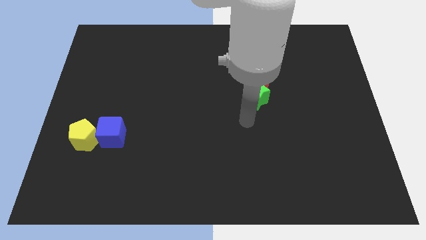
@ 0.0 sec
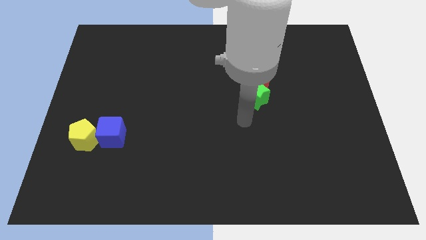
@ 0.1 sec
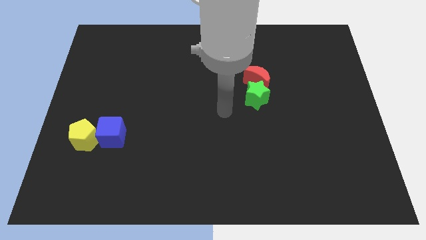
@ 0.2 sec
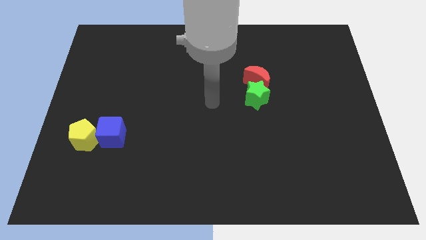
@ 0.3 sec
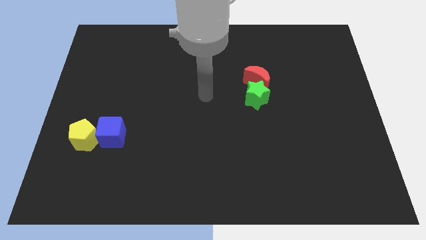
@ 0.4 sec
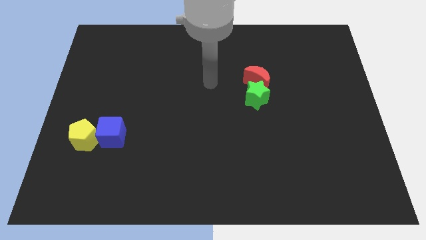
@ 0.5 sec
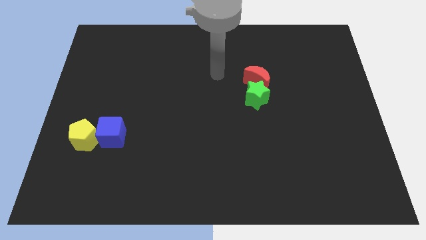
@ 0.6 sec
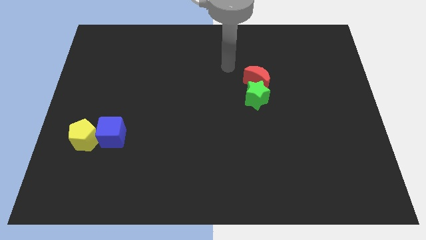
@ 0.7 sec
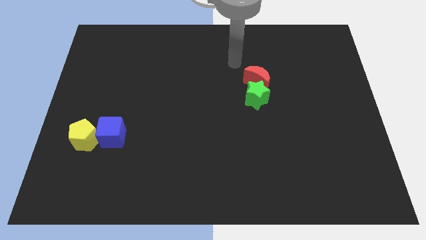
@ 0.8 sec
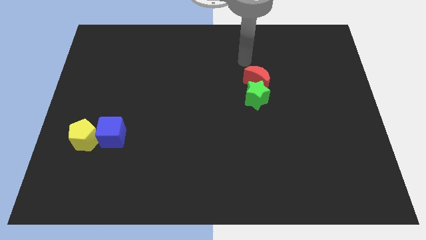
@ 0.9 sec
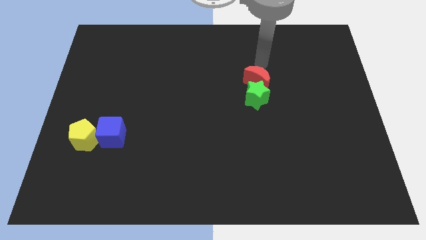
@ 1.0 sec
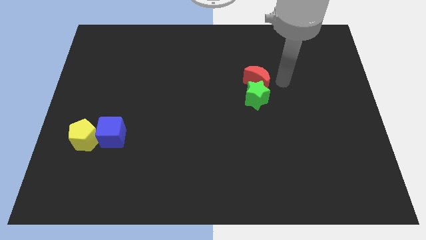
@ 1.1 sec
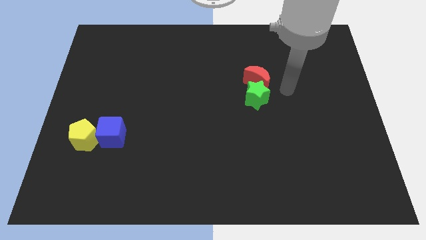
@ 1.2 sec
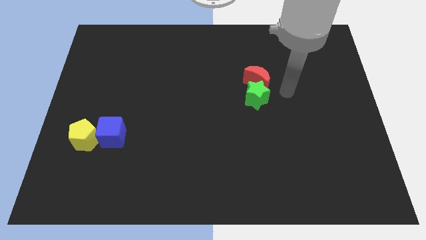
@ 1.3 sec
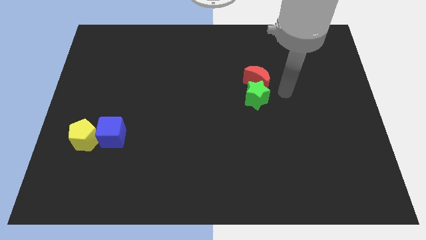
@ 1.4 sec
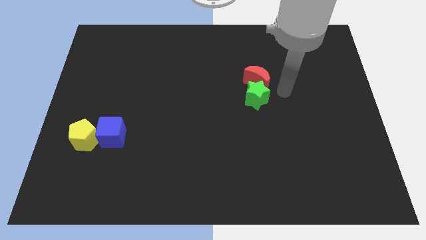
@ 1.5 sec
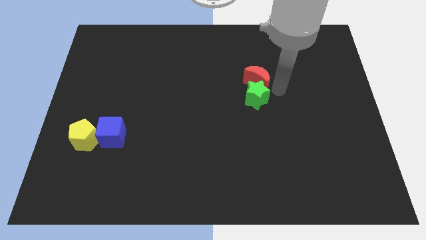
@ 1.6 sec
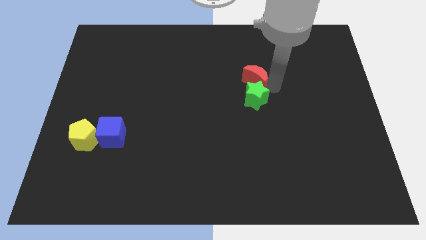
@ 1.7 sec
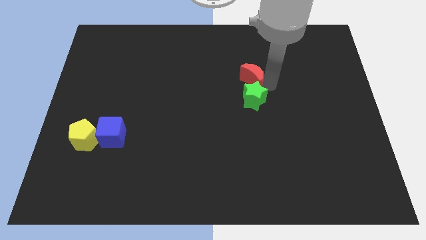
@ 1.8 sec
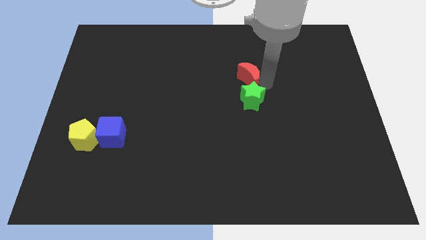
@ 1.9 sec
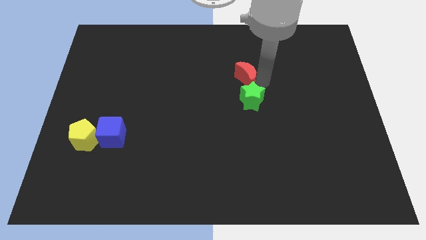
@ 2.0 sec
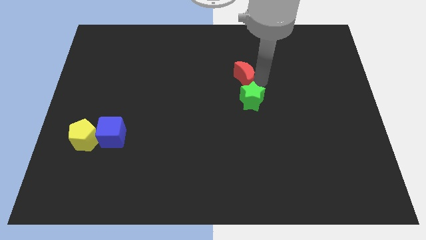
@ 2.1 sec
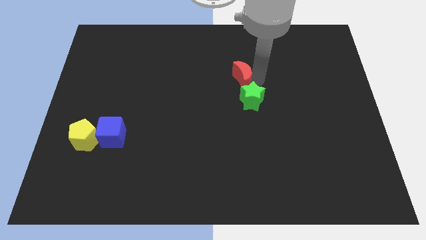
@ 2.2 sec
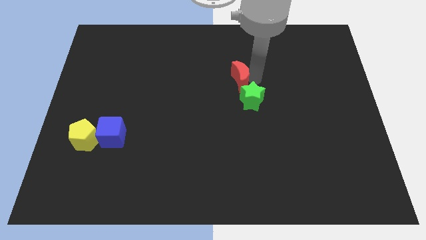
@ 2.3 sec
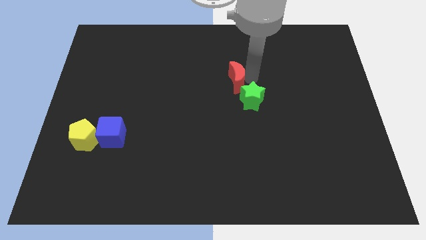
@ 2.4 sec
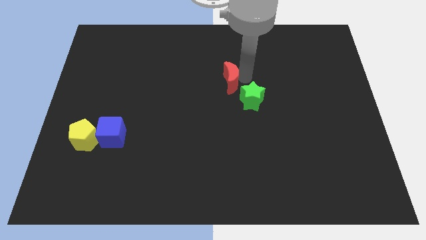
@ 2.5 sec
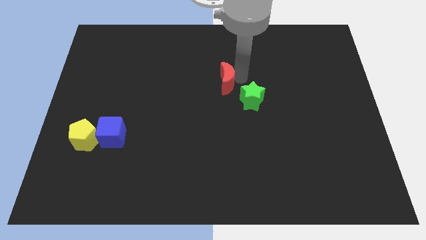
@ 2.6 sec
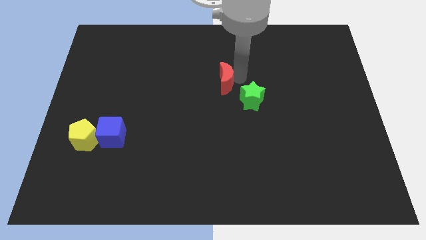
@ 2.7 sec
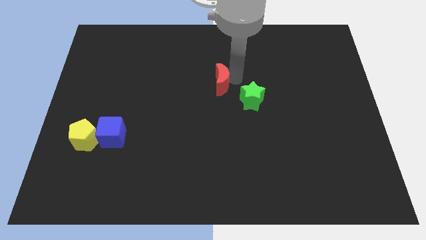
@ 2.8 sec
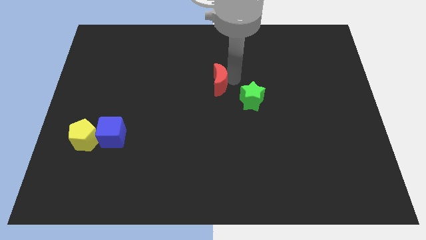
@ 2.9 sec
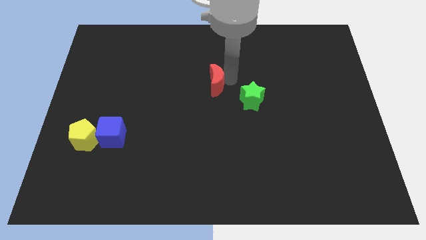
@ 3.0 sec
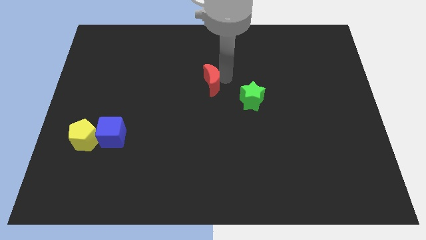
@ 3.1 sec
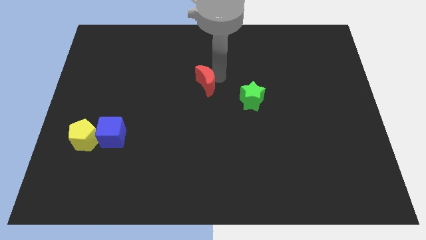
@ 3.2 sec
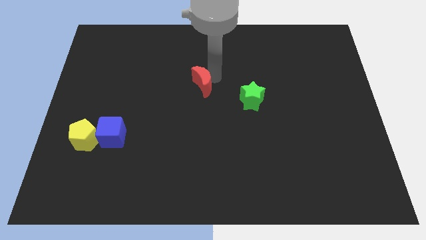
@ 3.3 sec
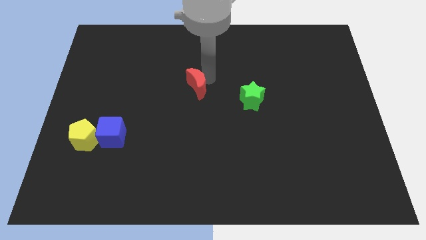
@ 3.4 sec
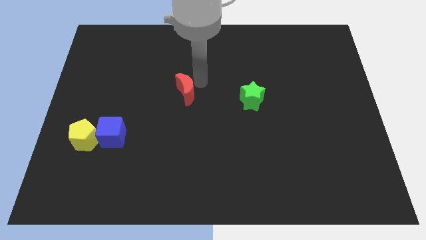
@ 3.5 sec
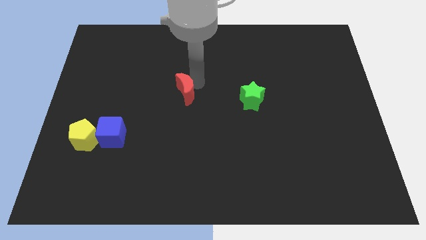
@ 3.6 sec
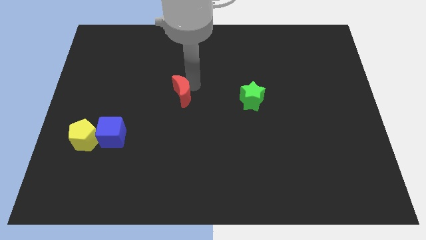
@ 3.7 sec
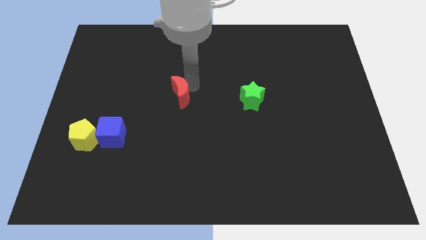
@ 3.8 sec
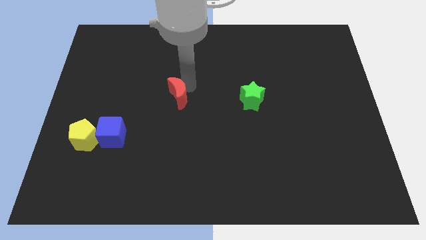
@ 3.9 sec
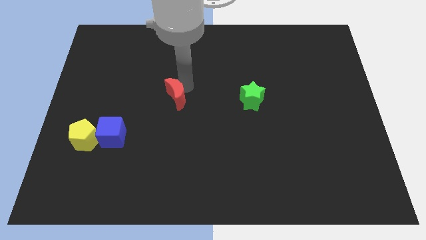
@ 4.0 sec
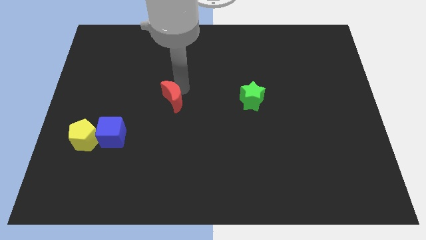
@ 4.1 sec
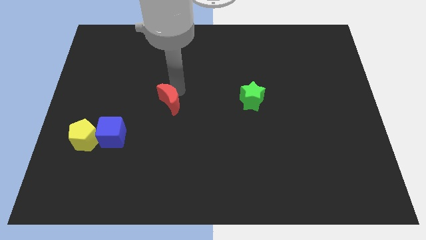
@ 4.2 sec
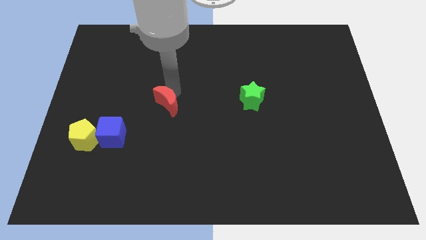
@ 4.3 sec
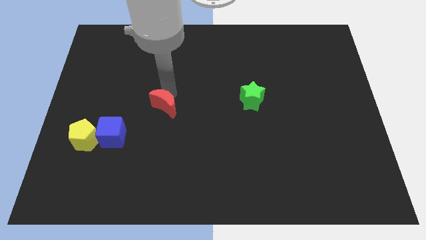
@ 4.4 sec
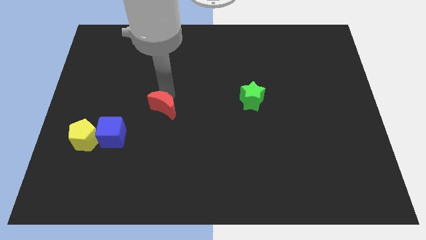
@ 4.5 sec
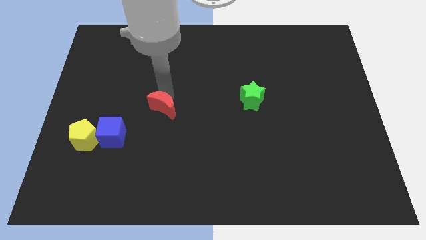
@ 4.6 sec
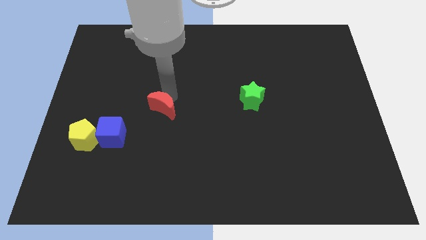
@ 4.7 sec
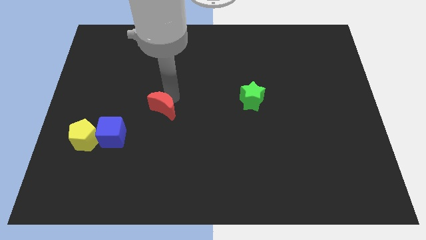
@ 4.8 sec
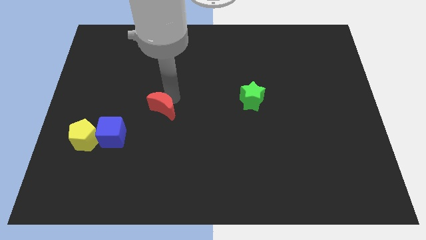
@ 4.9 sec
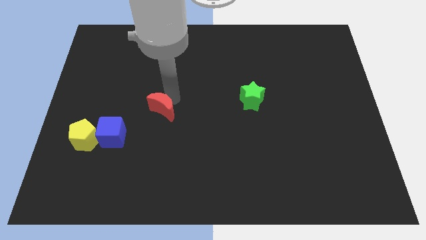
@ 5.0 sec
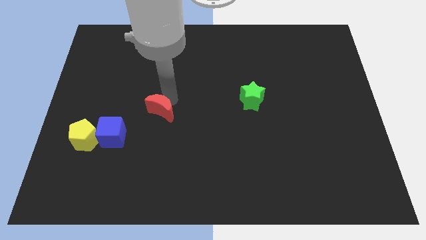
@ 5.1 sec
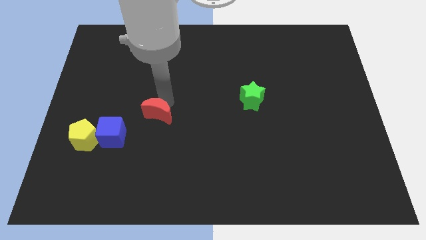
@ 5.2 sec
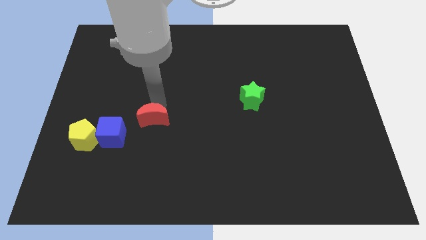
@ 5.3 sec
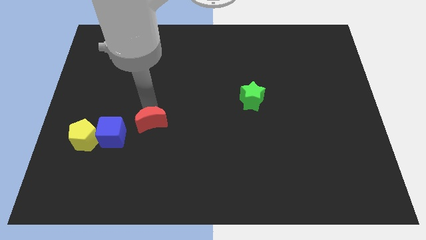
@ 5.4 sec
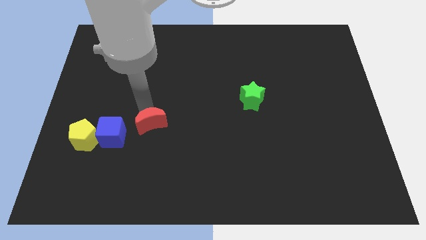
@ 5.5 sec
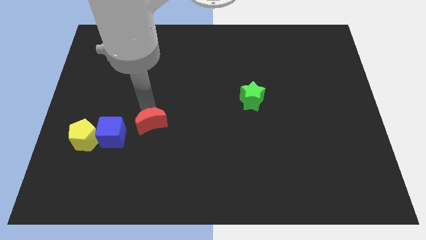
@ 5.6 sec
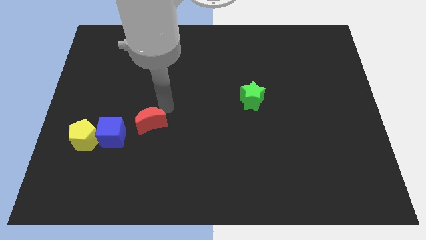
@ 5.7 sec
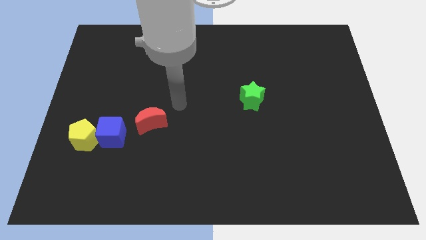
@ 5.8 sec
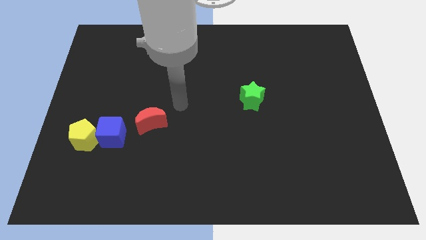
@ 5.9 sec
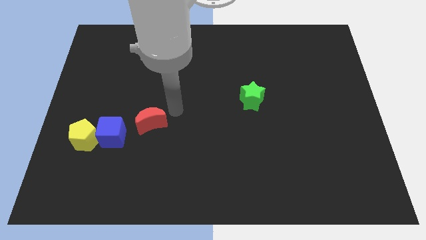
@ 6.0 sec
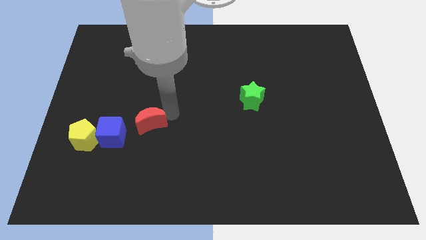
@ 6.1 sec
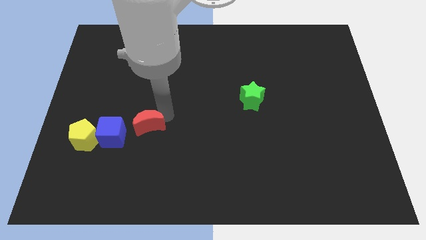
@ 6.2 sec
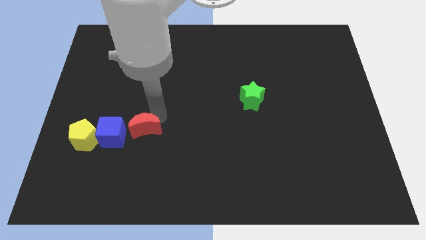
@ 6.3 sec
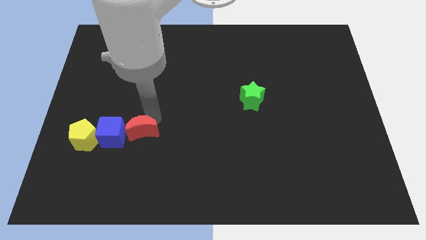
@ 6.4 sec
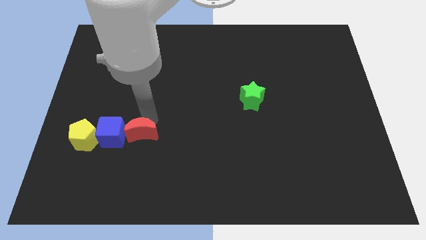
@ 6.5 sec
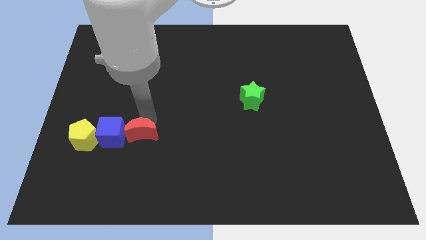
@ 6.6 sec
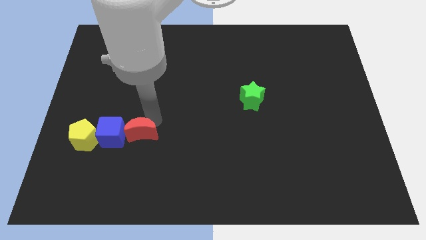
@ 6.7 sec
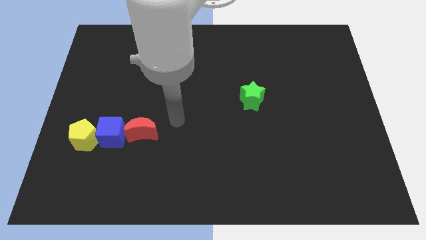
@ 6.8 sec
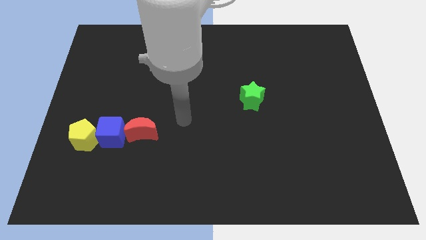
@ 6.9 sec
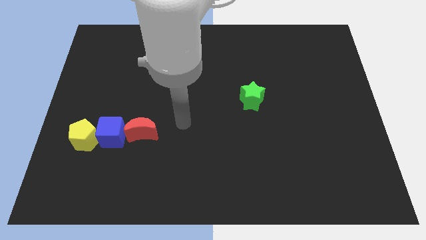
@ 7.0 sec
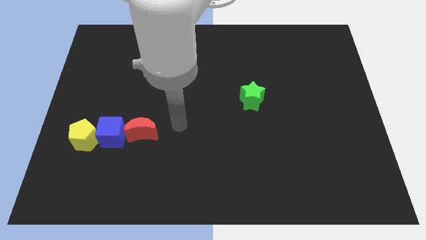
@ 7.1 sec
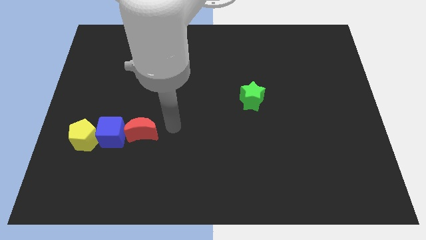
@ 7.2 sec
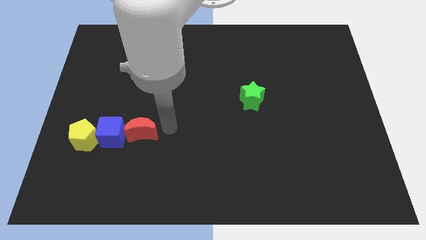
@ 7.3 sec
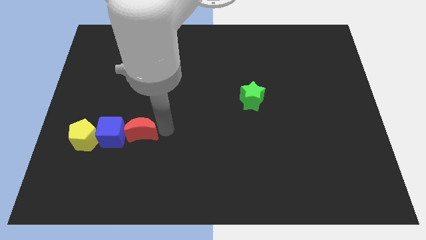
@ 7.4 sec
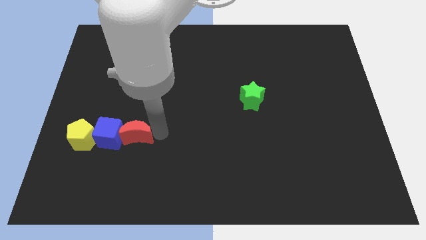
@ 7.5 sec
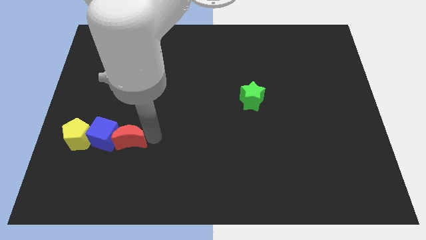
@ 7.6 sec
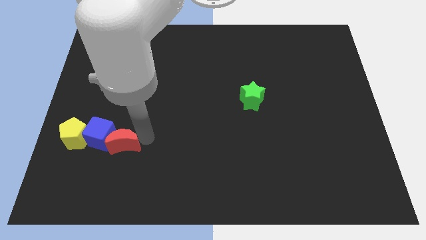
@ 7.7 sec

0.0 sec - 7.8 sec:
push the red moon to the blue block
